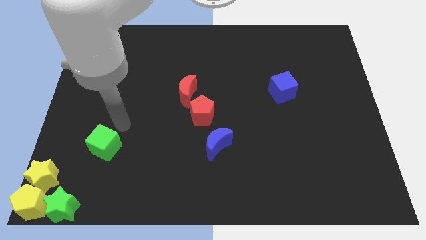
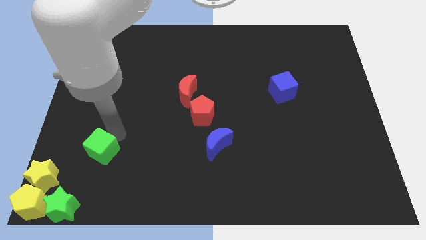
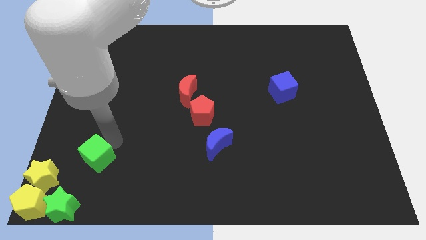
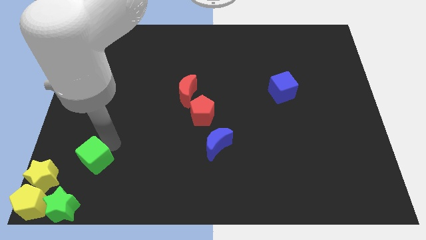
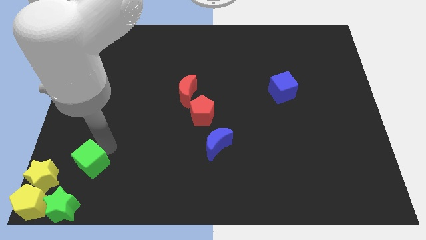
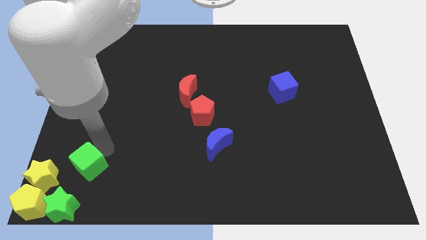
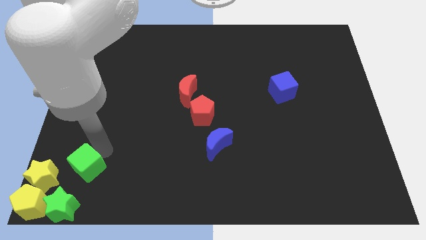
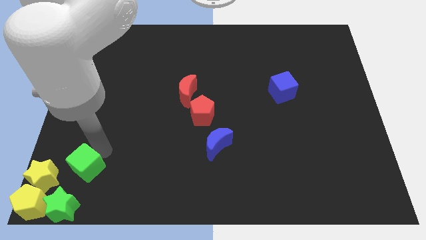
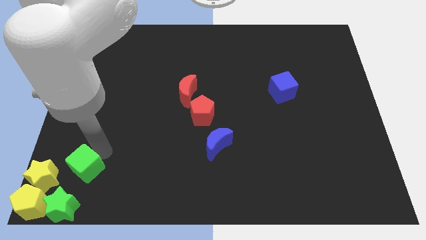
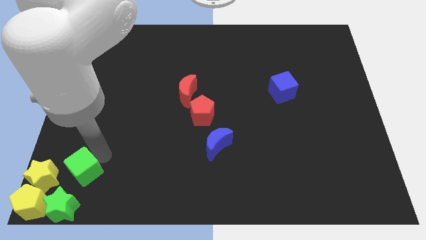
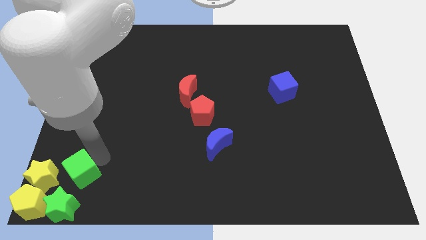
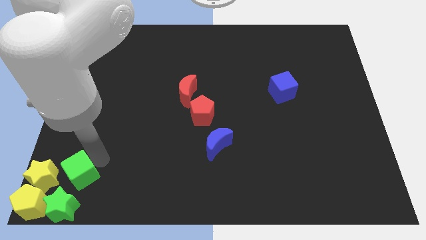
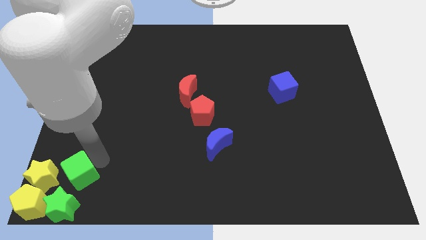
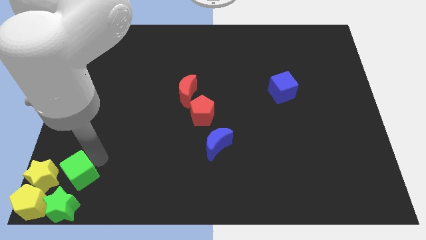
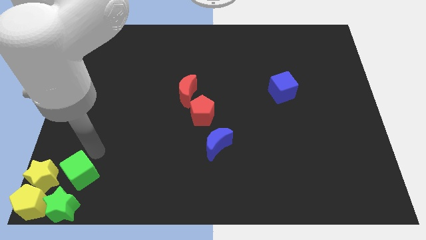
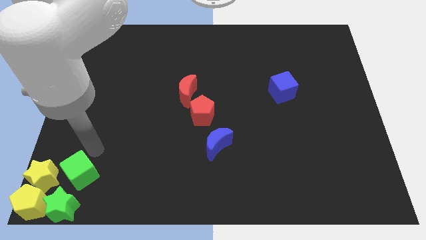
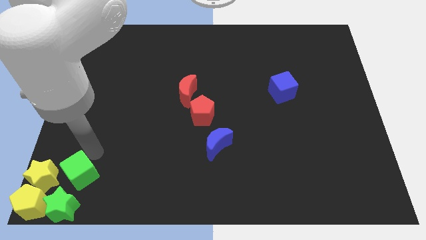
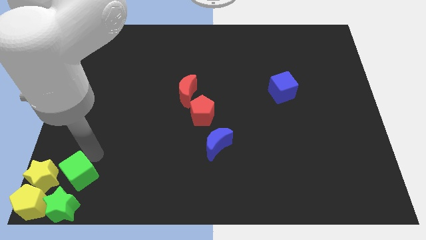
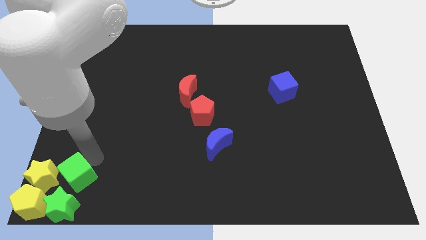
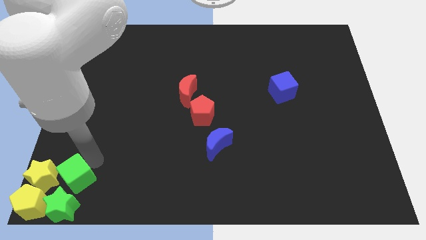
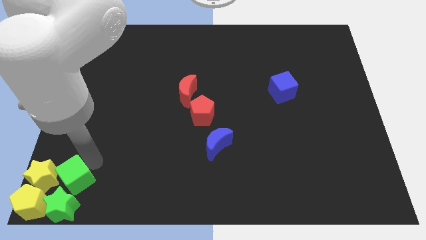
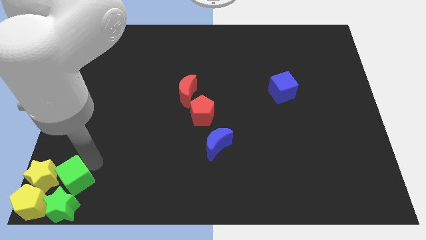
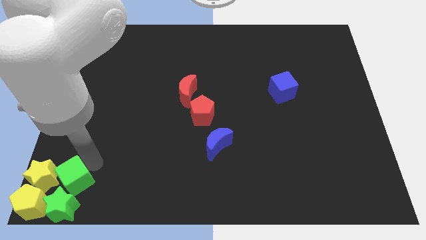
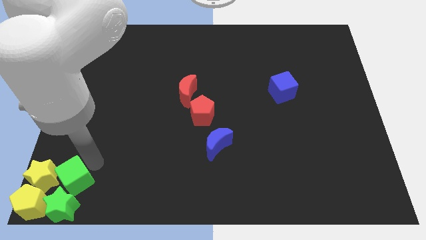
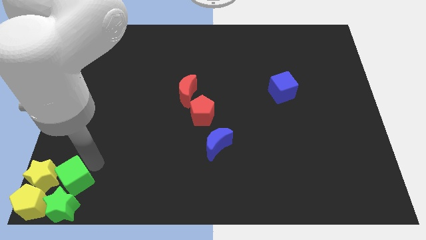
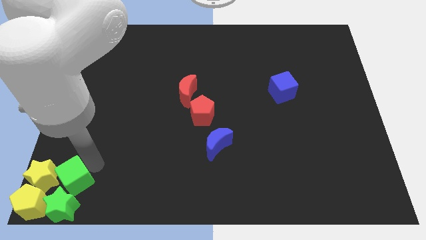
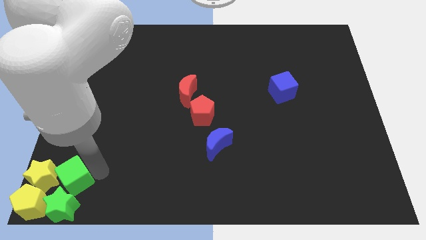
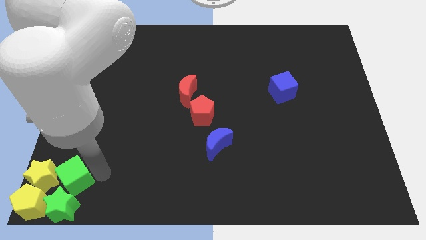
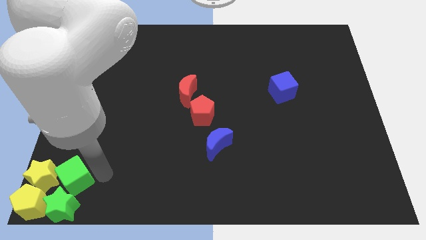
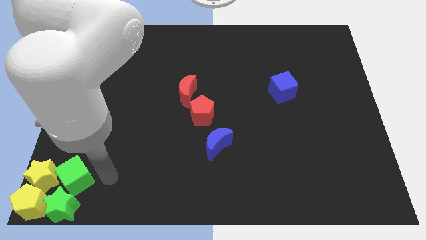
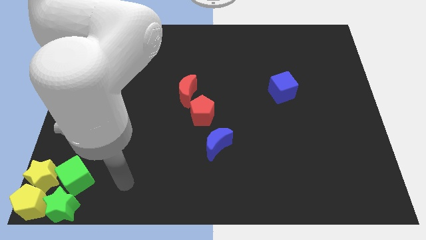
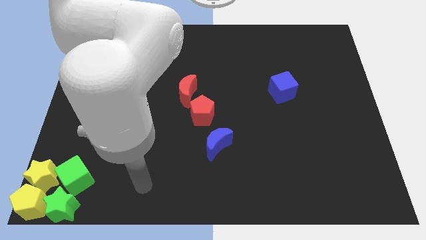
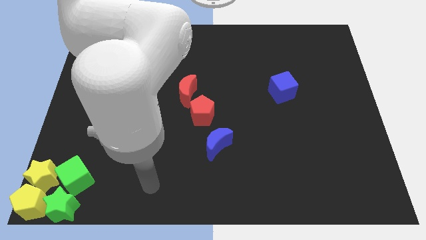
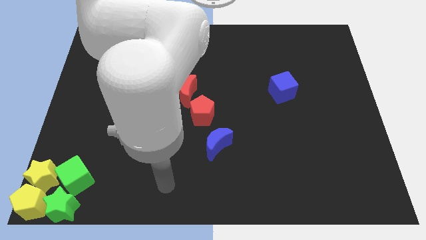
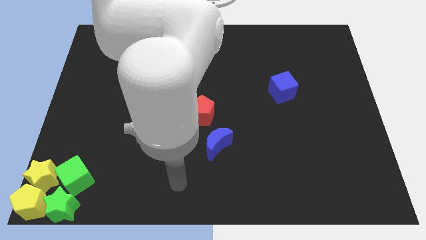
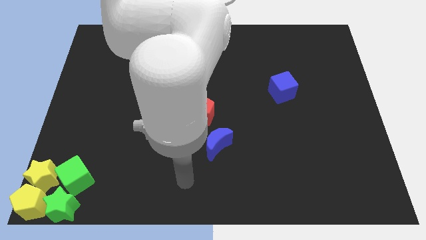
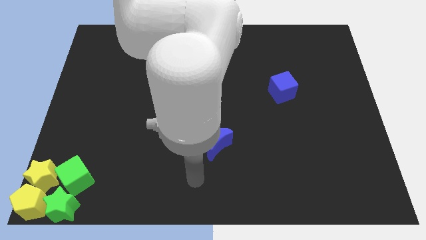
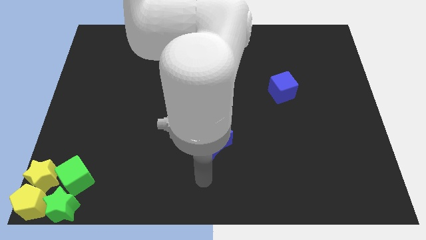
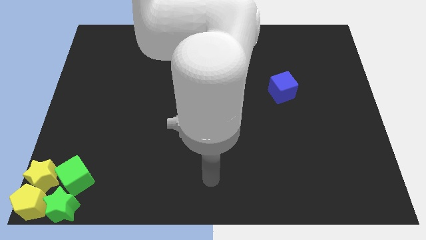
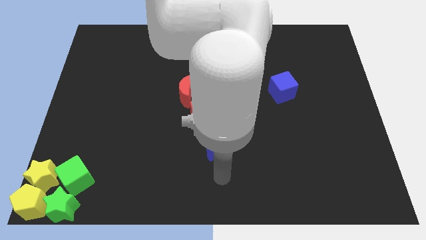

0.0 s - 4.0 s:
move the green cube to the right of the yellow star

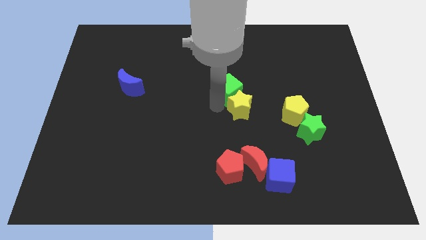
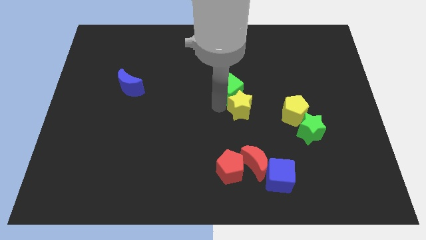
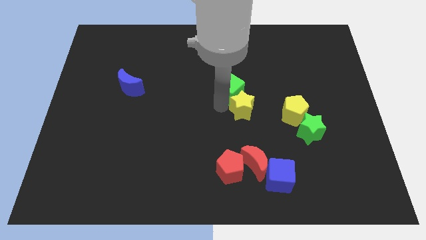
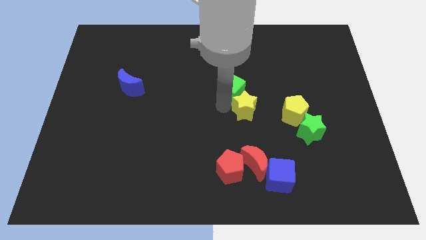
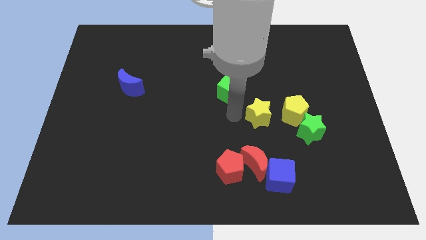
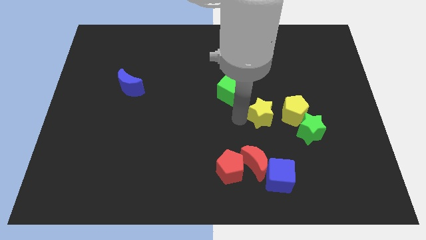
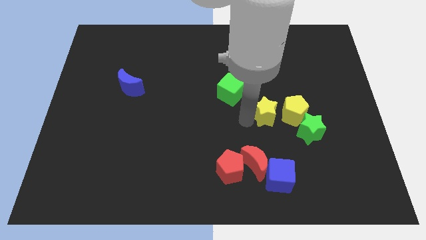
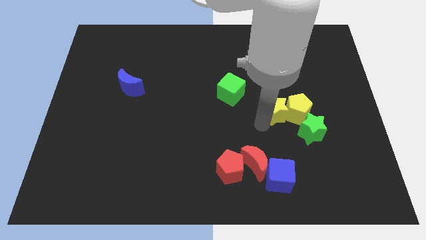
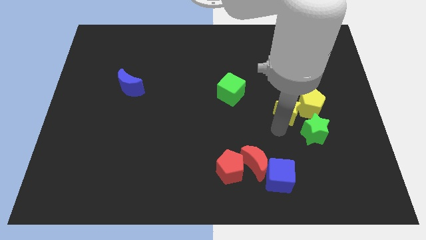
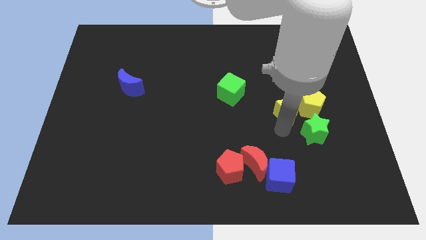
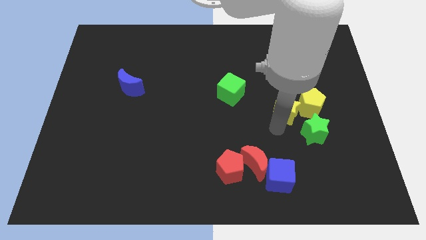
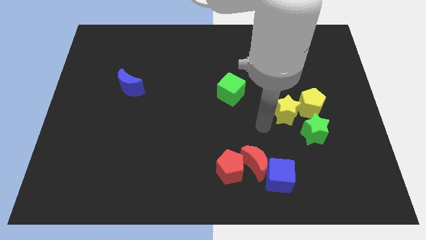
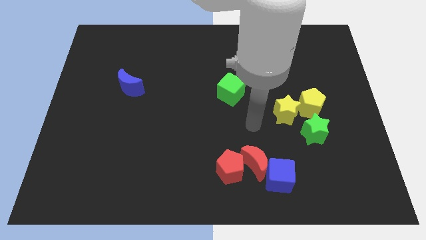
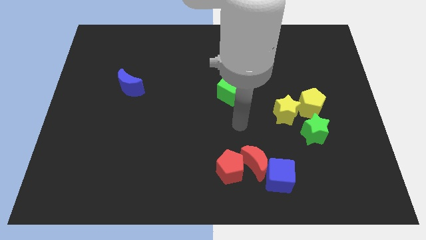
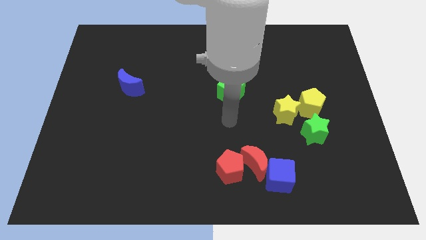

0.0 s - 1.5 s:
push the yellow star into the yellow pentagon

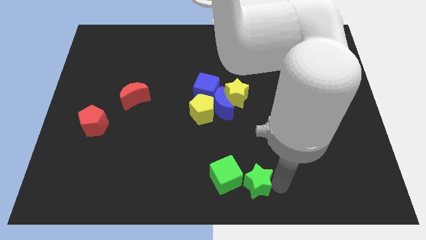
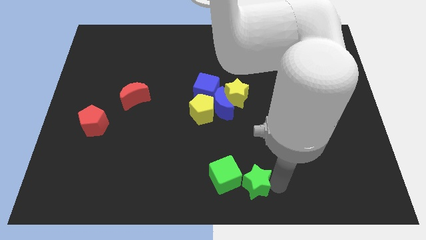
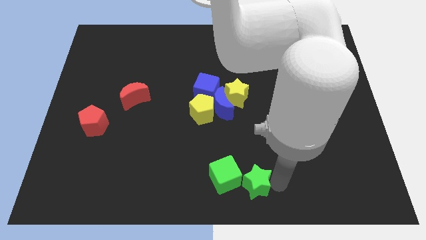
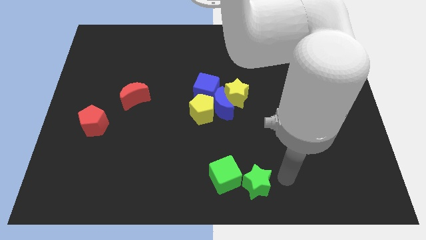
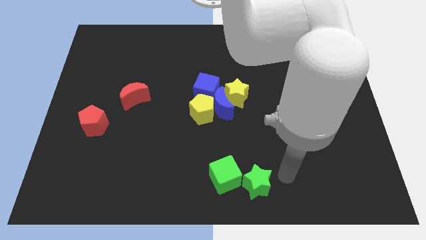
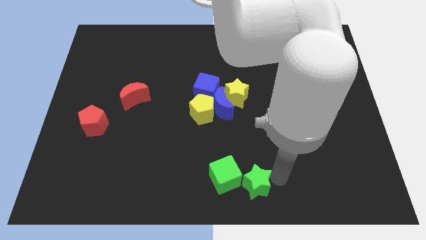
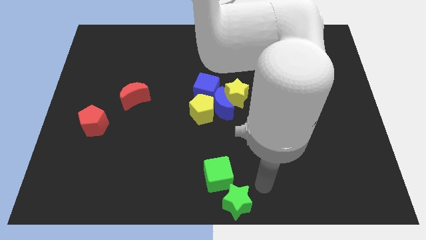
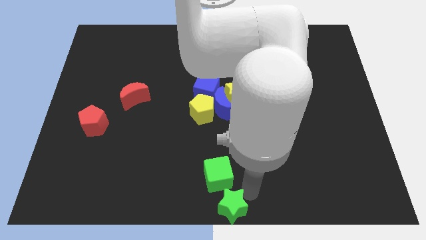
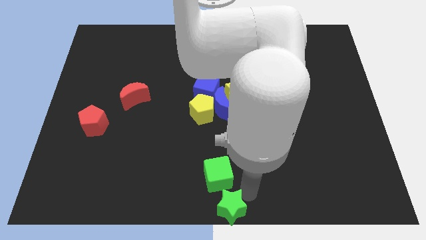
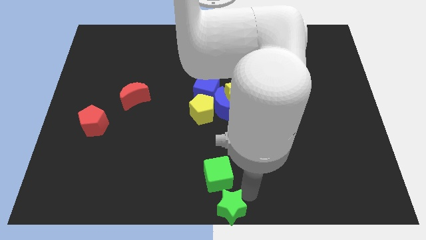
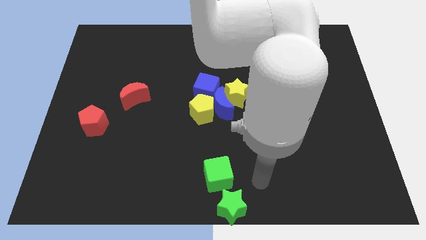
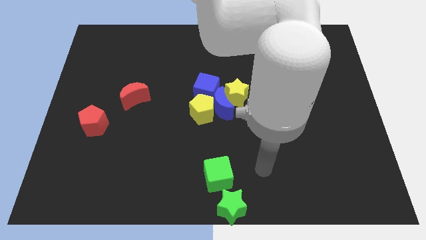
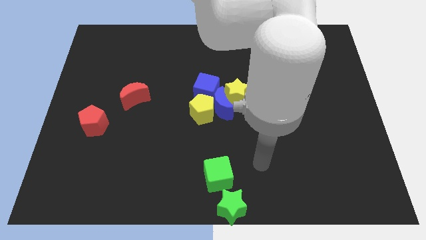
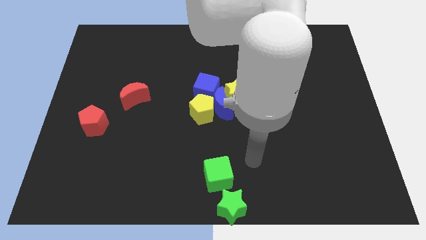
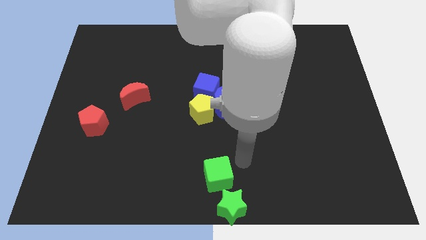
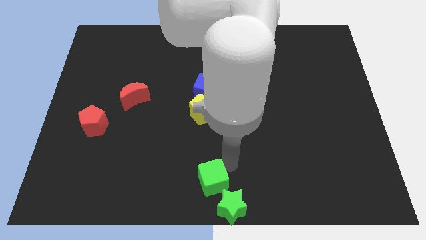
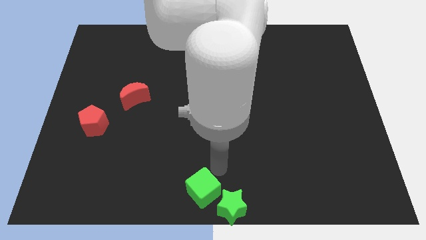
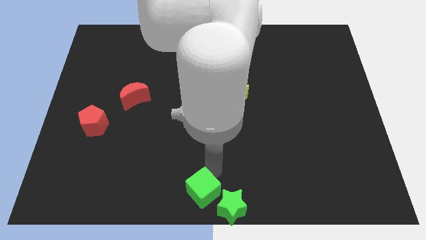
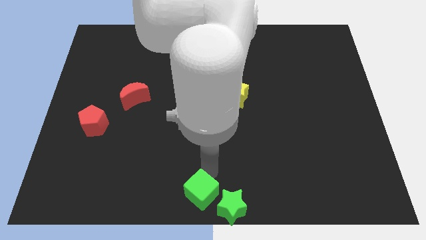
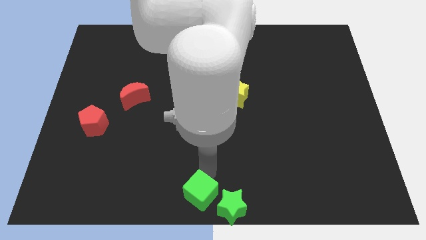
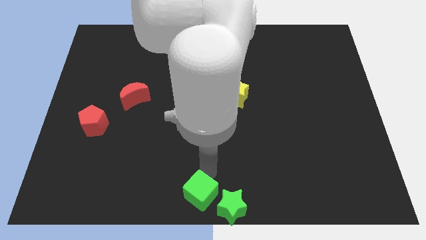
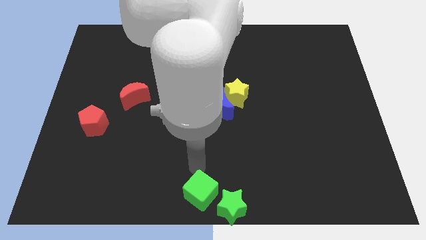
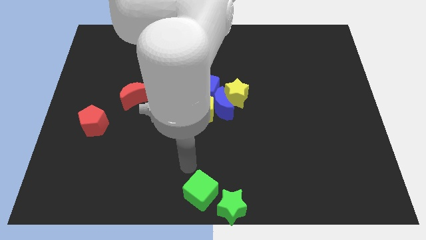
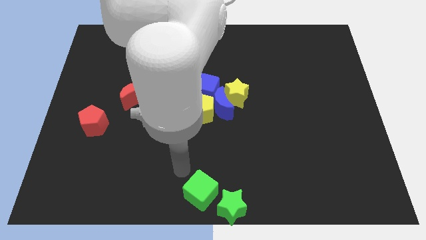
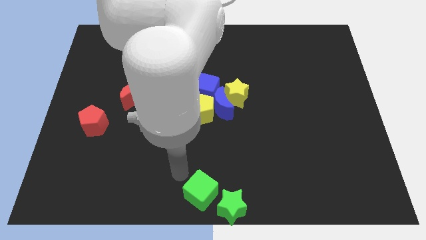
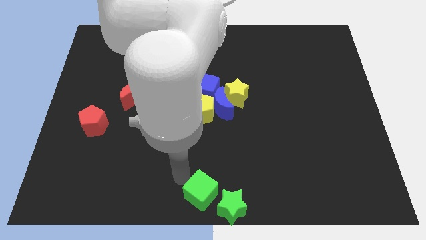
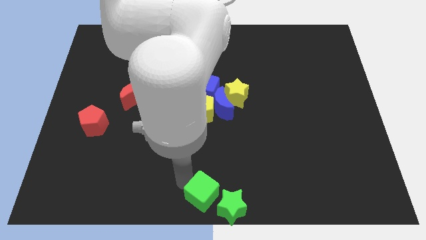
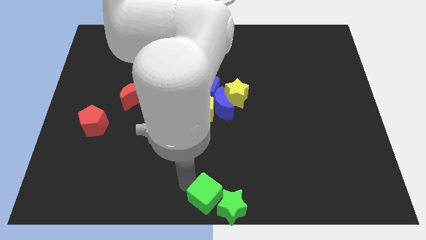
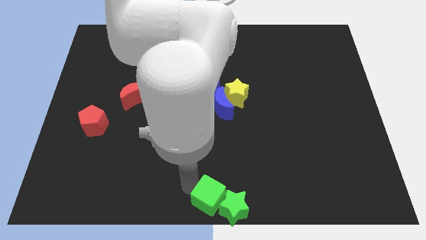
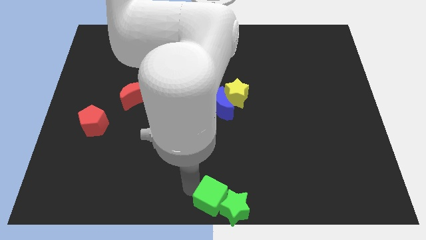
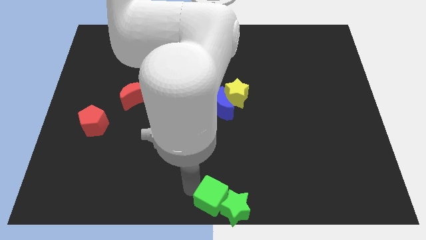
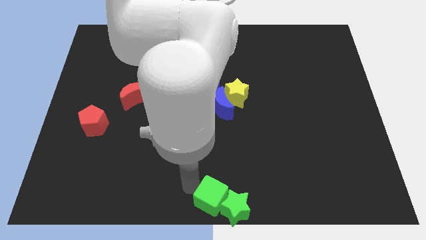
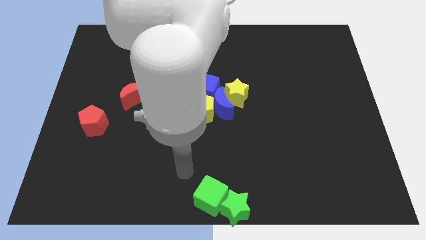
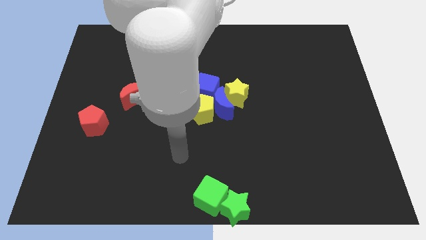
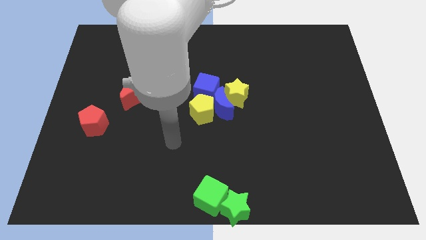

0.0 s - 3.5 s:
push the green blocks at the bottom center of the board
